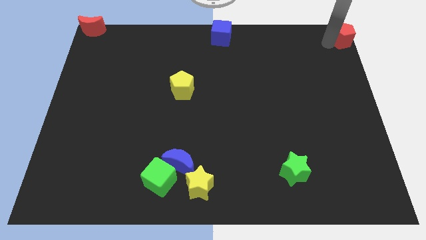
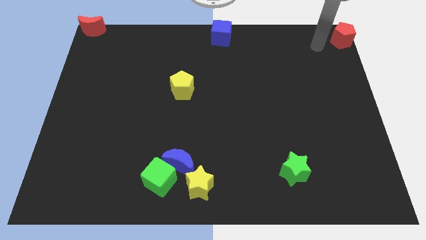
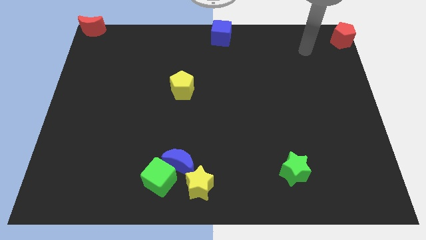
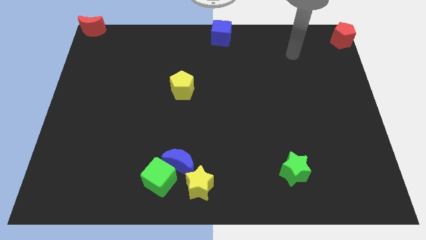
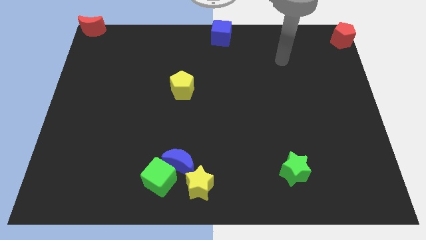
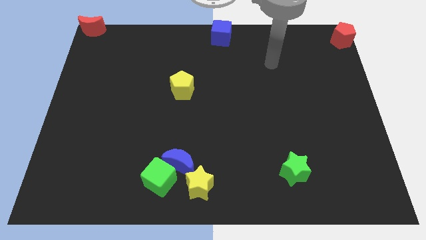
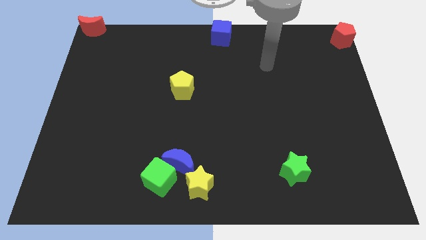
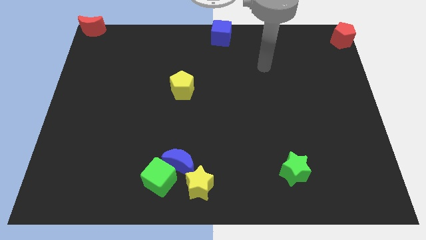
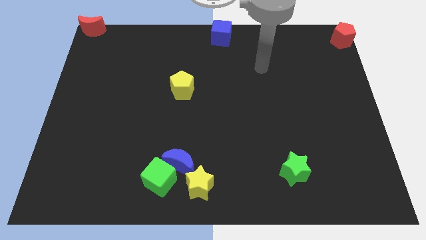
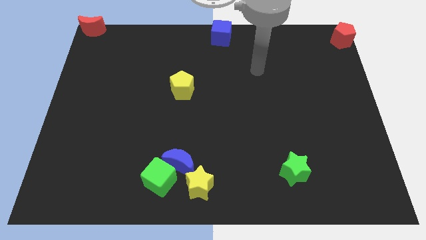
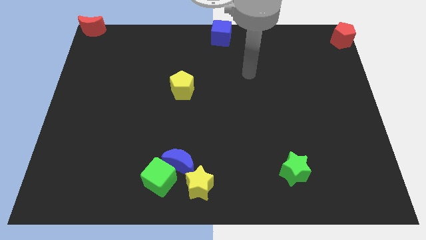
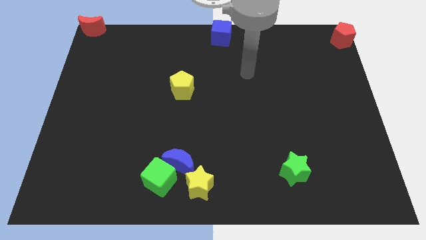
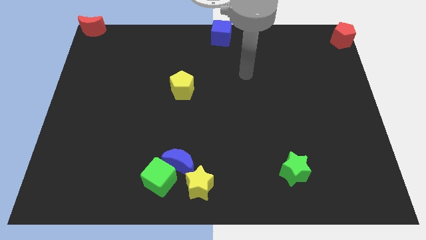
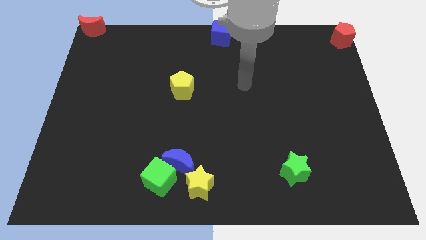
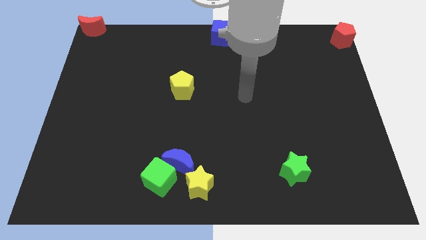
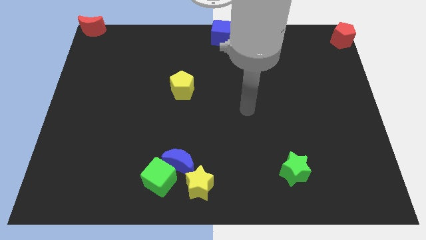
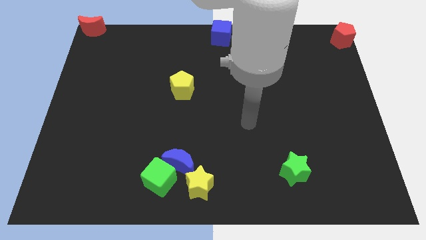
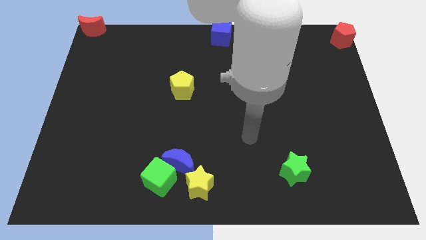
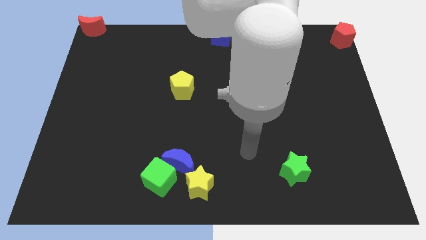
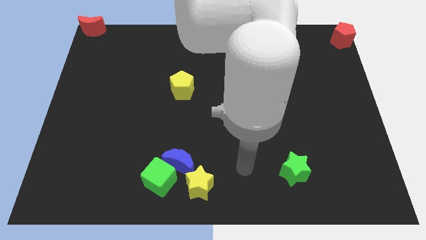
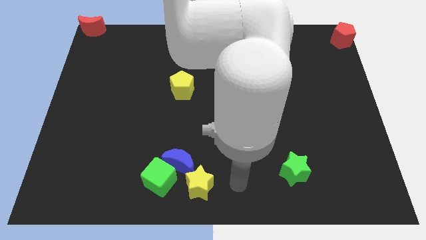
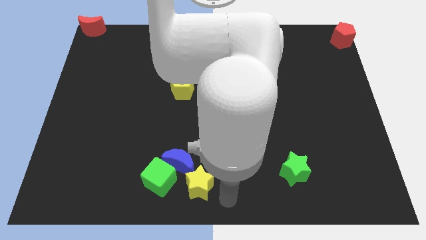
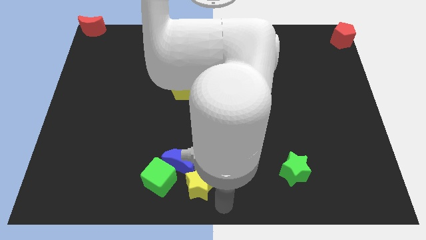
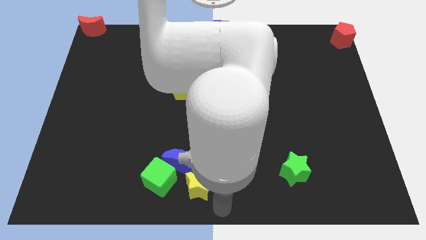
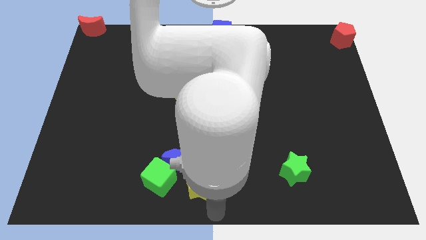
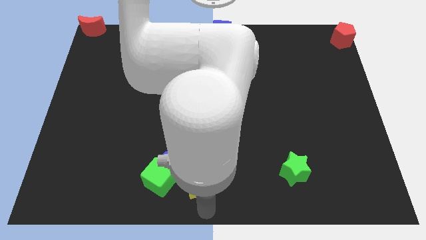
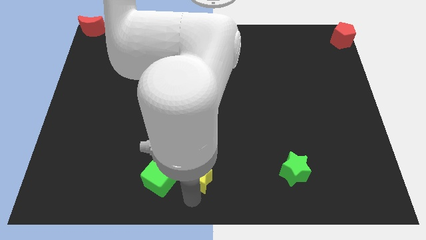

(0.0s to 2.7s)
move your arm away from the red pentagon

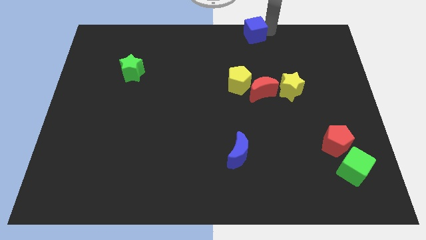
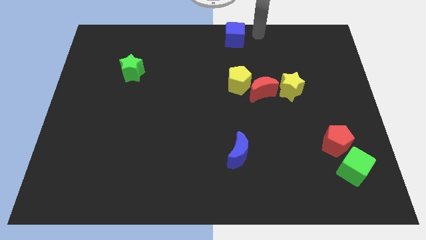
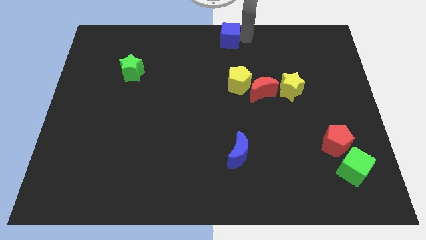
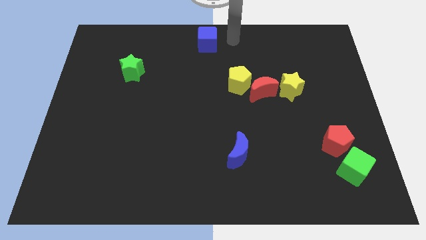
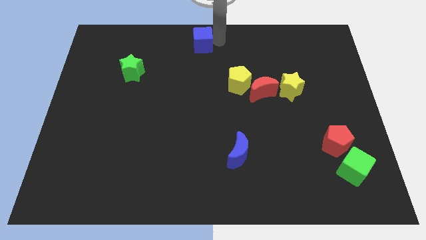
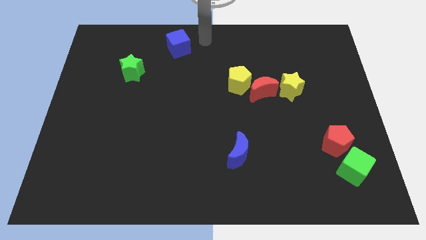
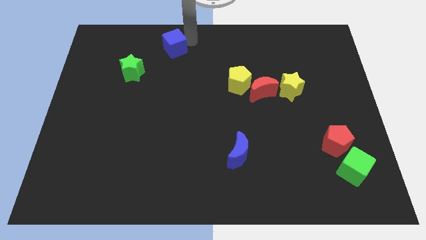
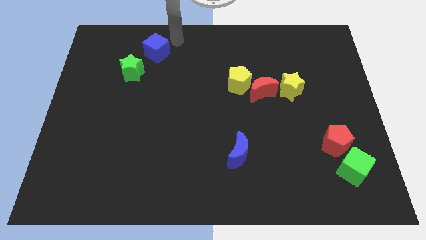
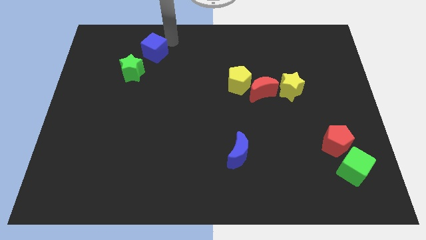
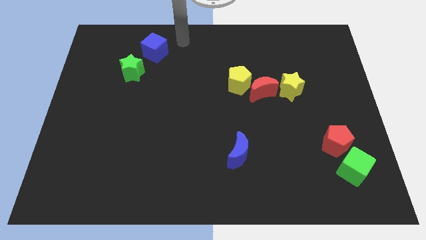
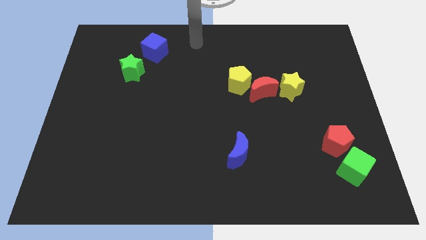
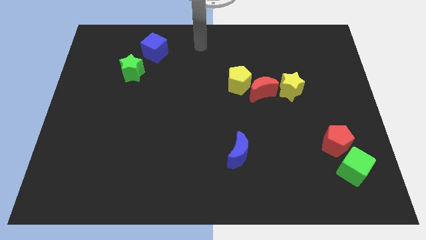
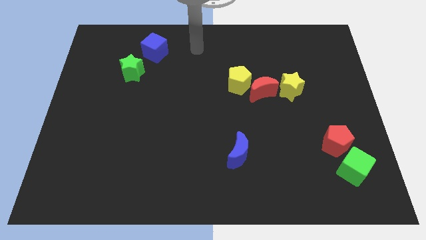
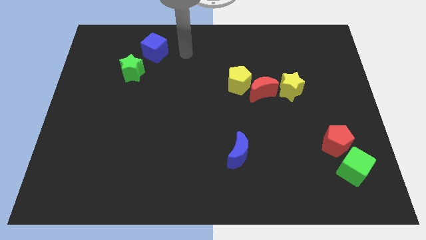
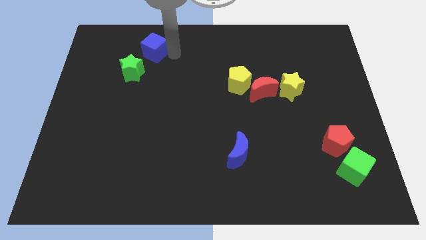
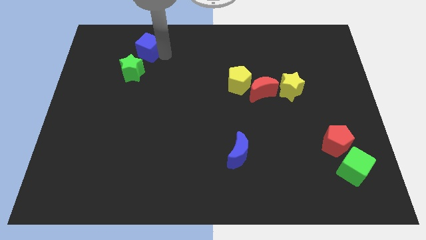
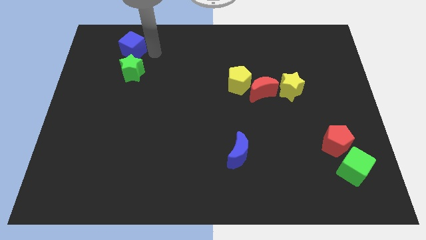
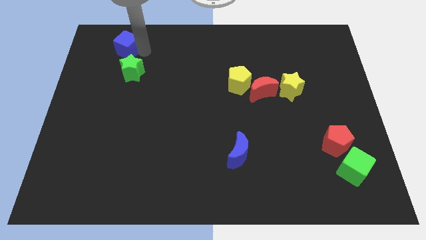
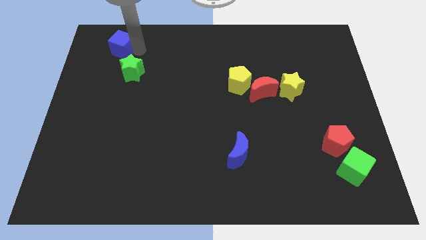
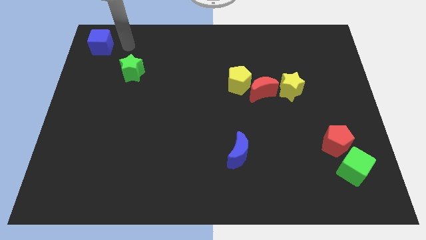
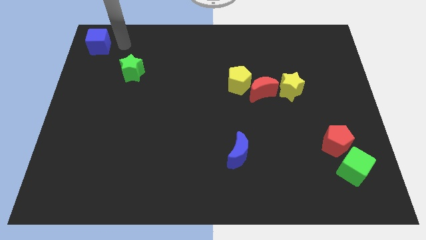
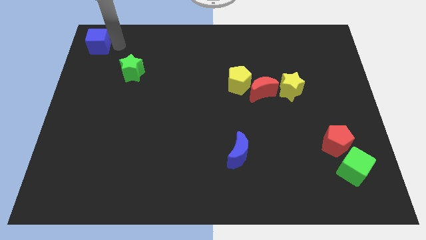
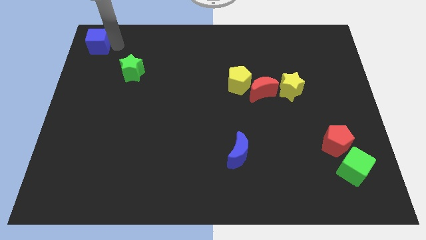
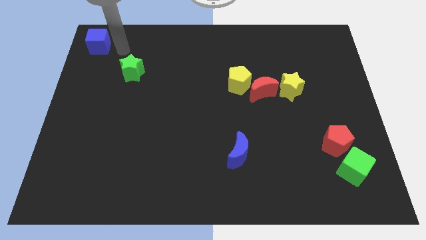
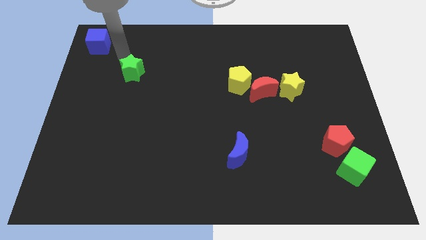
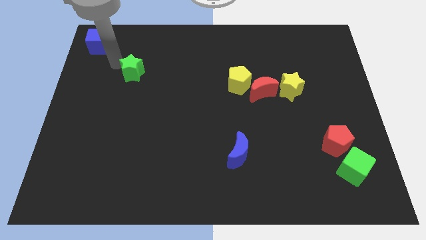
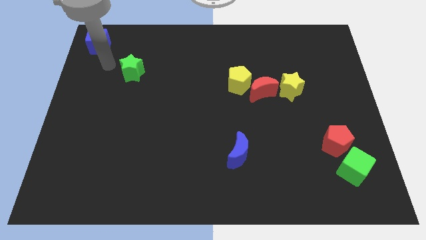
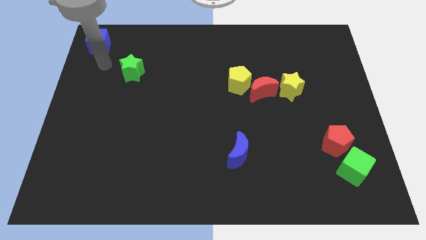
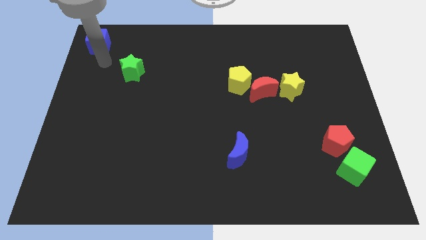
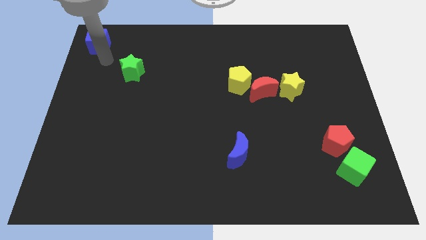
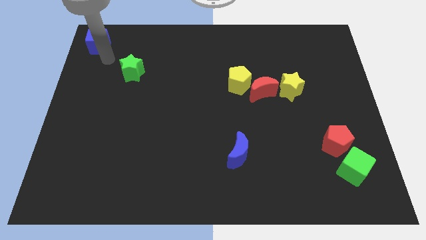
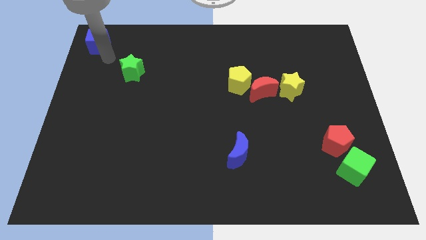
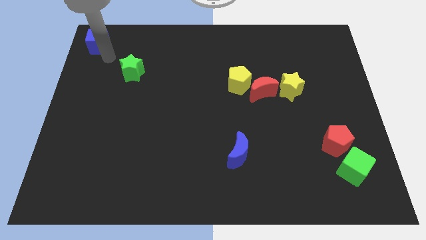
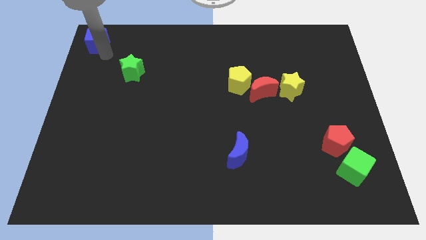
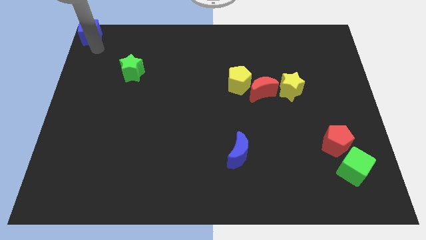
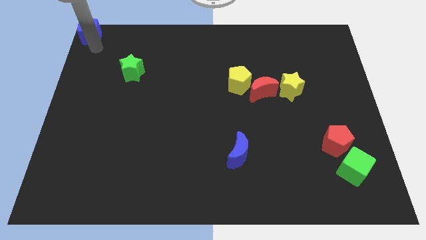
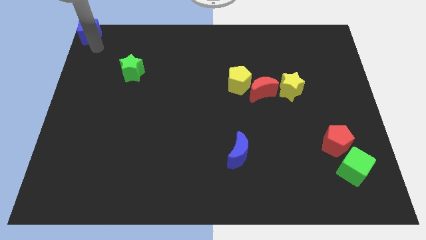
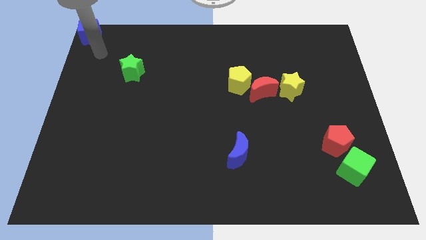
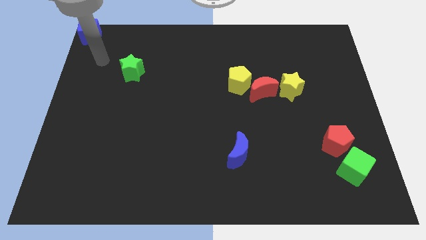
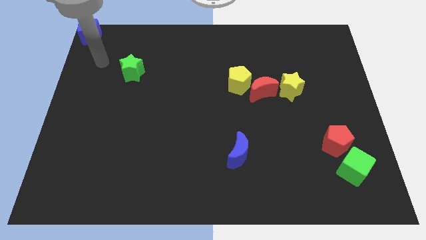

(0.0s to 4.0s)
move the blue cube to top left

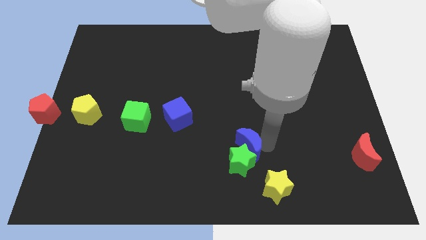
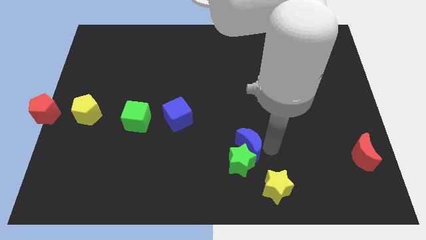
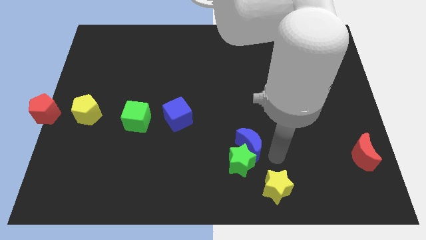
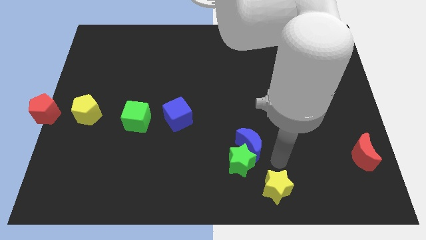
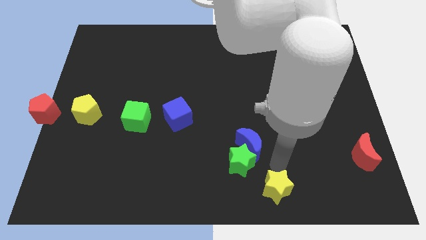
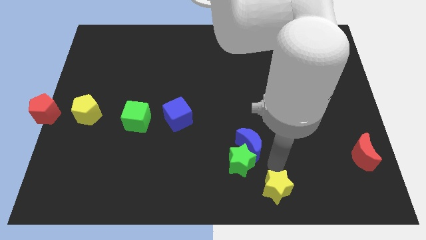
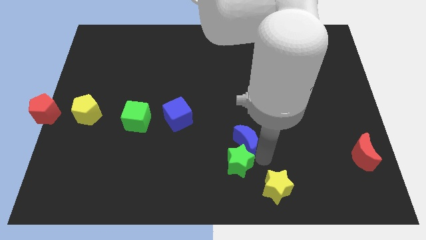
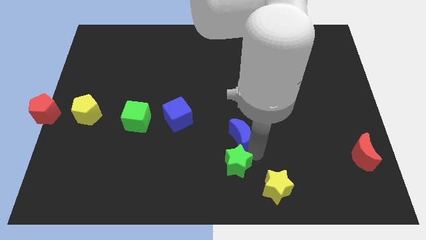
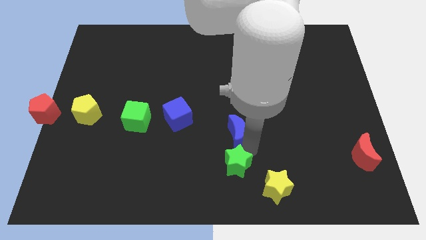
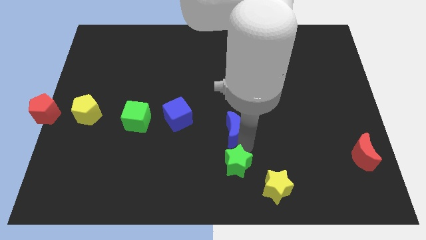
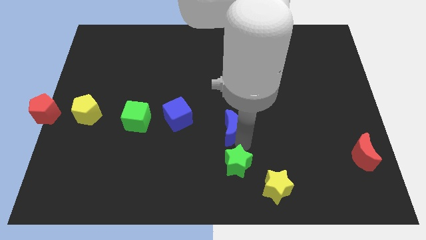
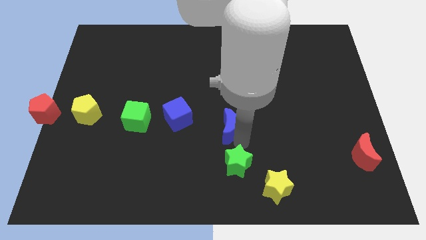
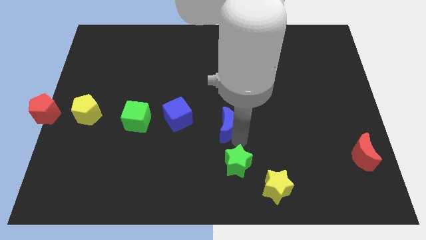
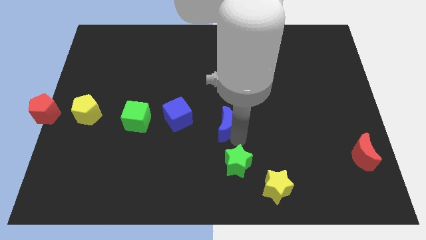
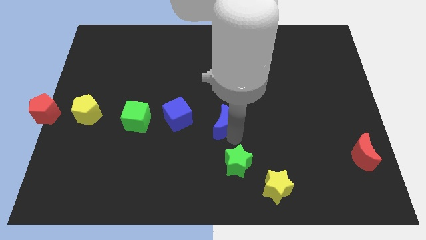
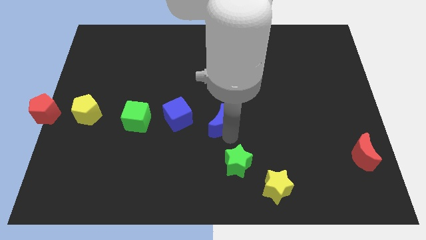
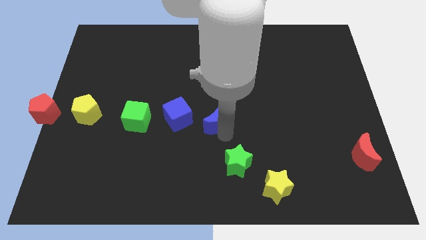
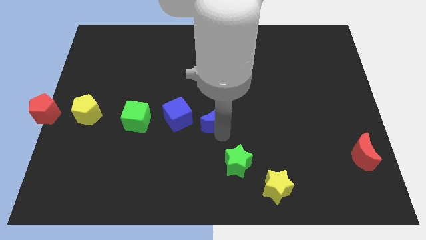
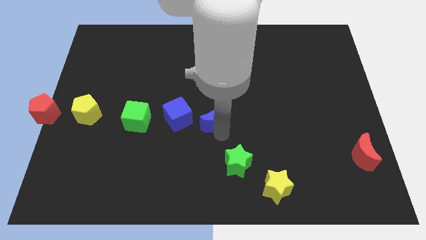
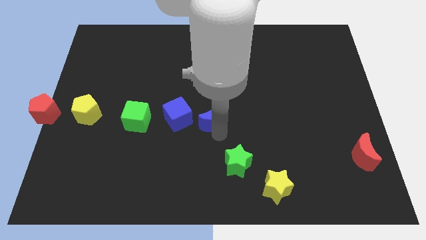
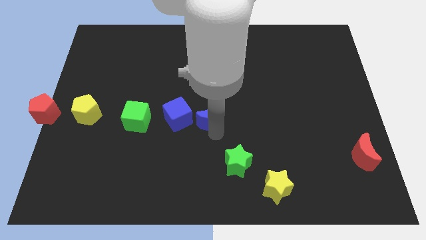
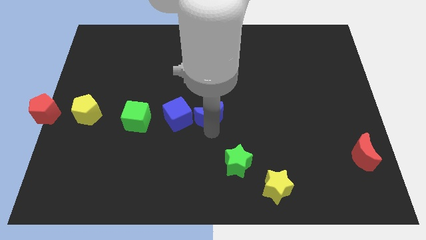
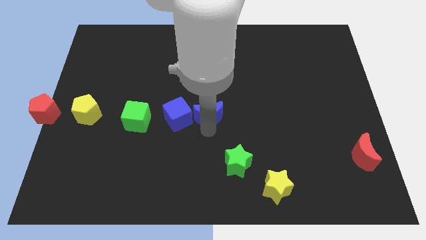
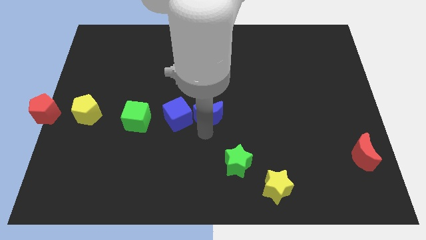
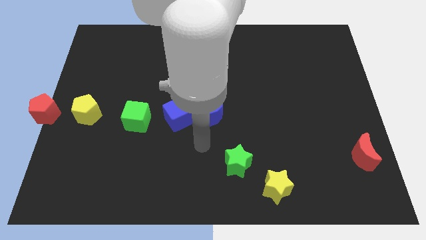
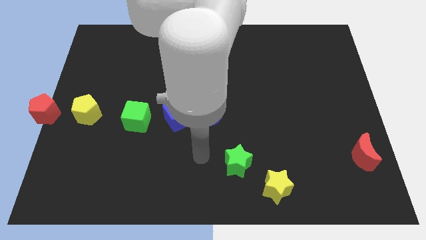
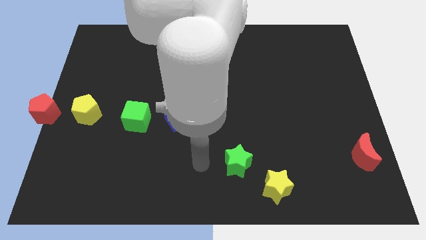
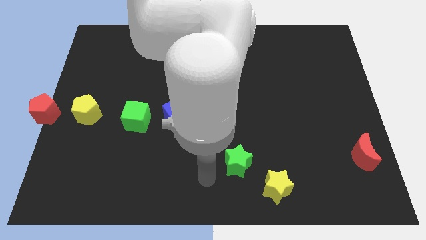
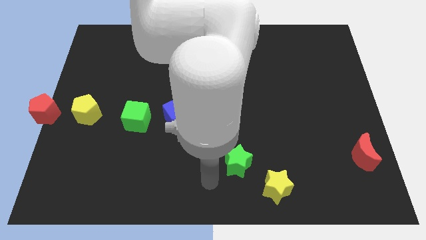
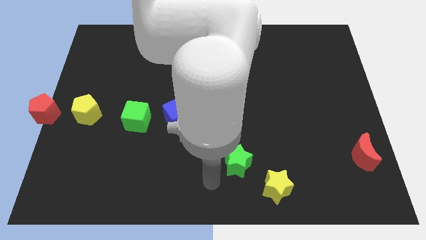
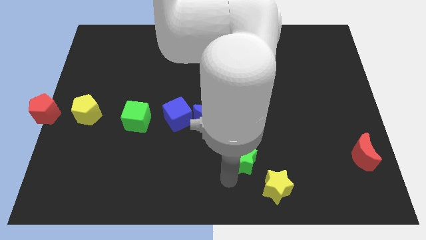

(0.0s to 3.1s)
place the blue moon parallel right to the blue cube
